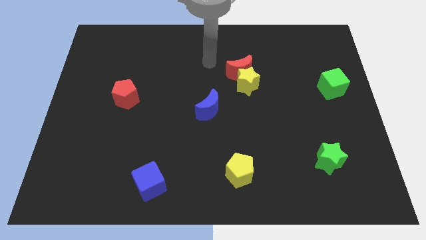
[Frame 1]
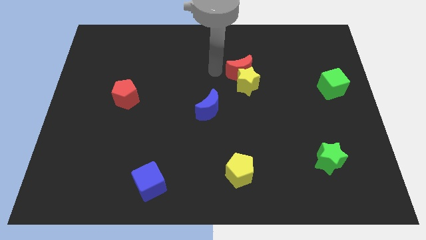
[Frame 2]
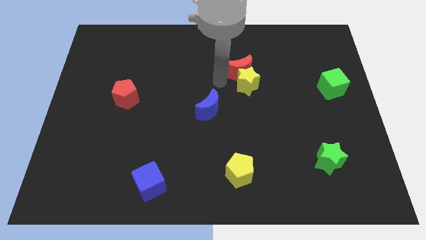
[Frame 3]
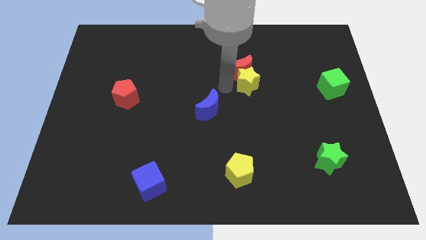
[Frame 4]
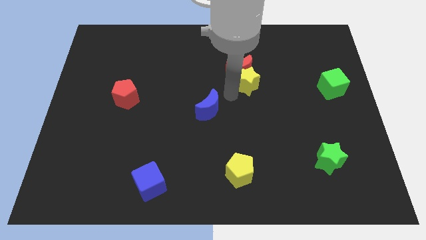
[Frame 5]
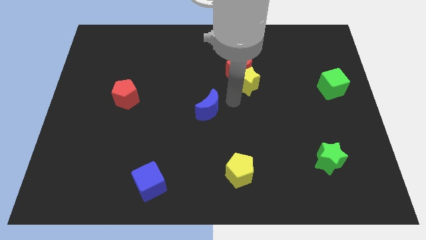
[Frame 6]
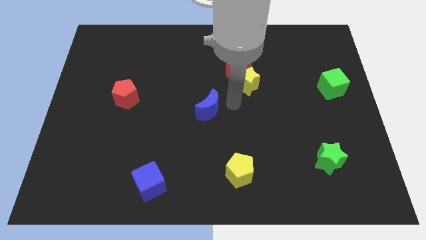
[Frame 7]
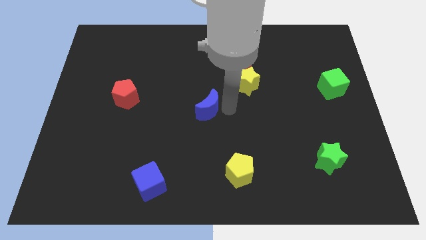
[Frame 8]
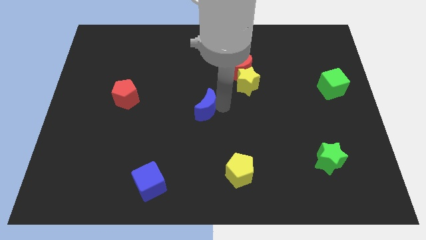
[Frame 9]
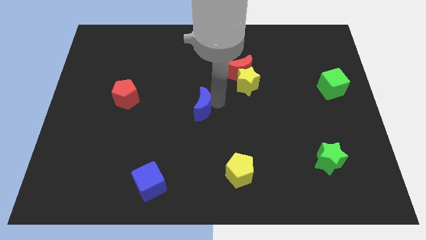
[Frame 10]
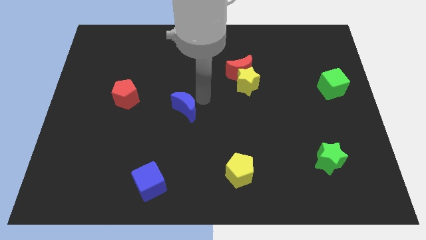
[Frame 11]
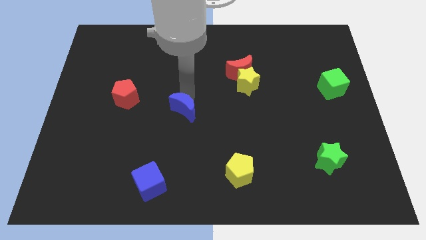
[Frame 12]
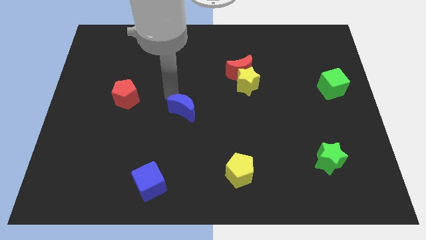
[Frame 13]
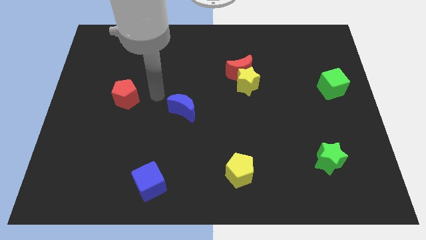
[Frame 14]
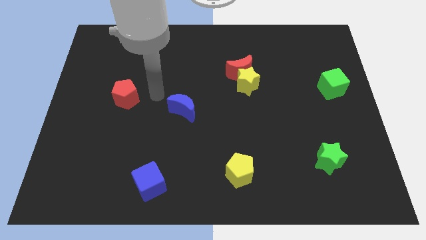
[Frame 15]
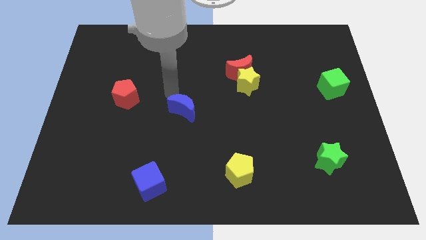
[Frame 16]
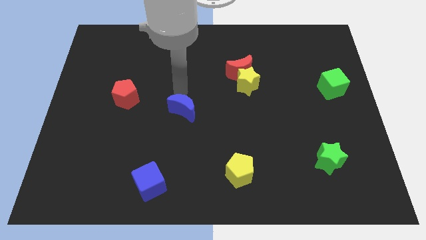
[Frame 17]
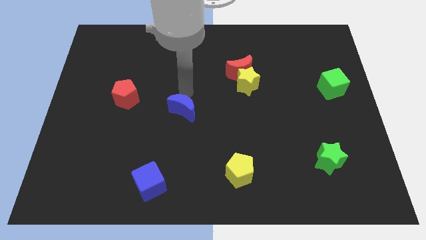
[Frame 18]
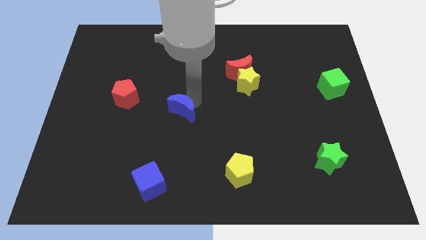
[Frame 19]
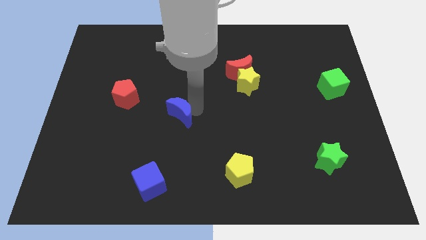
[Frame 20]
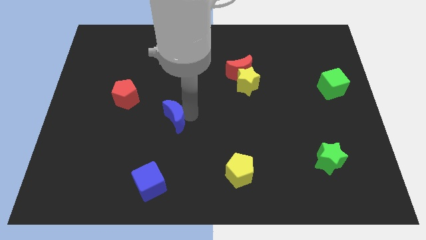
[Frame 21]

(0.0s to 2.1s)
push the blue moon slightly downwards

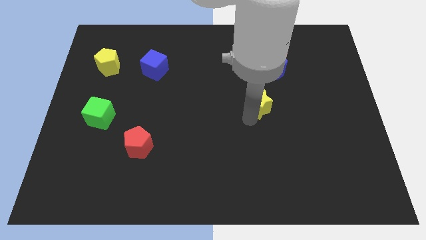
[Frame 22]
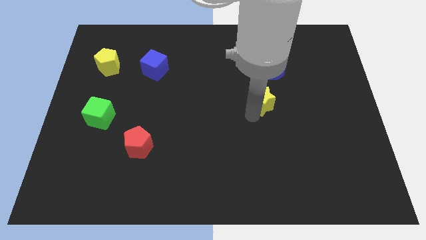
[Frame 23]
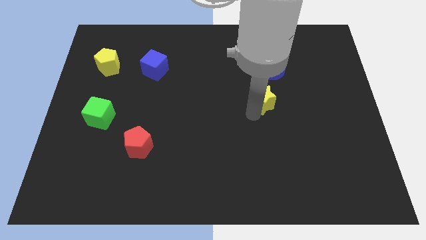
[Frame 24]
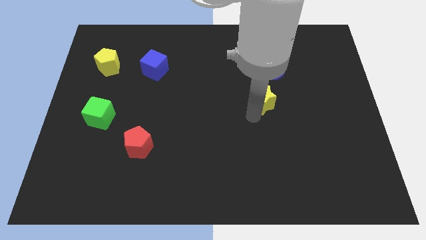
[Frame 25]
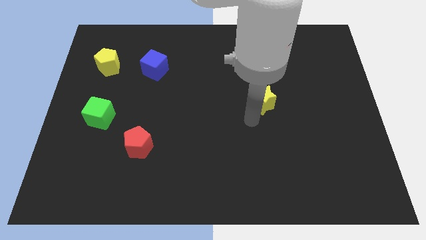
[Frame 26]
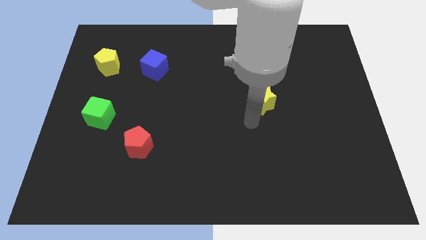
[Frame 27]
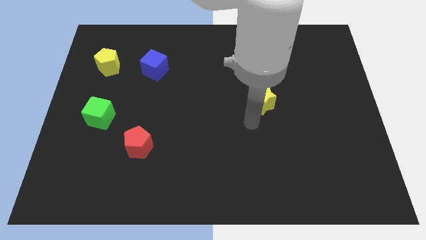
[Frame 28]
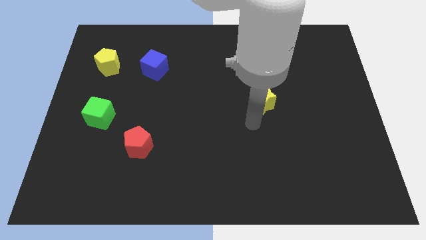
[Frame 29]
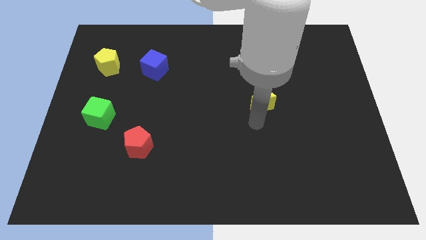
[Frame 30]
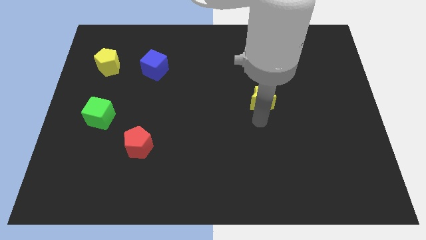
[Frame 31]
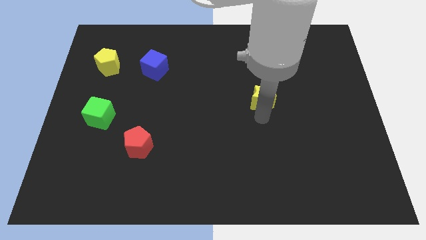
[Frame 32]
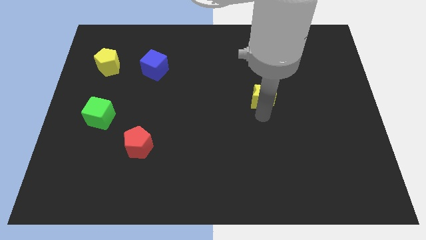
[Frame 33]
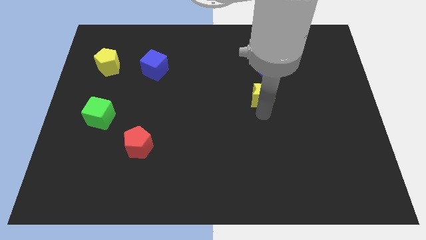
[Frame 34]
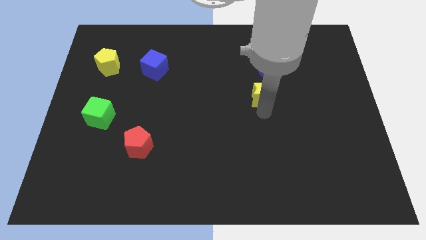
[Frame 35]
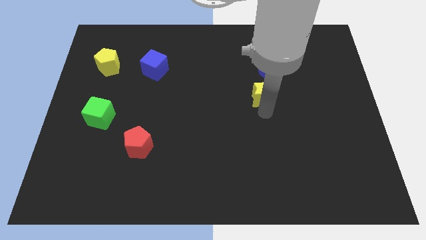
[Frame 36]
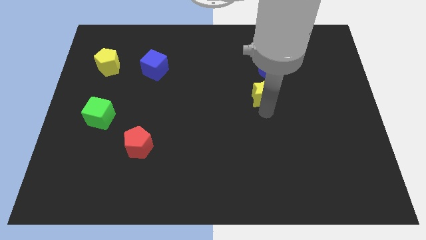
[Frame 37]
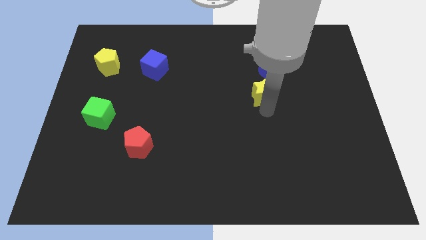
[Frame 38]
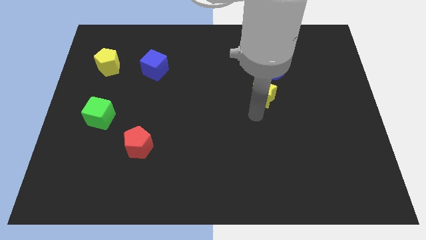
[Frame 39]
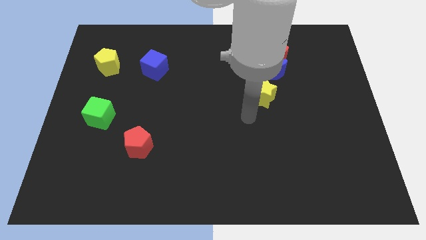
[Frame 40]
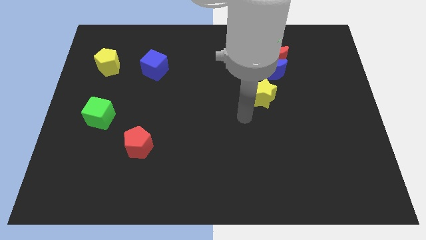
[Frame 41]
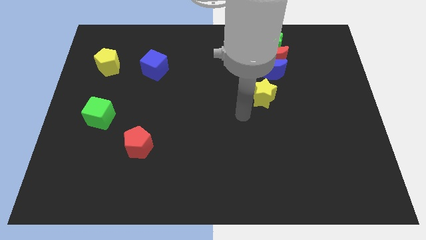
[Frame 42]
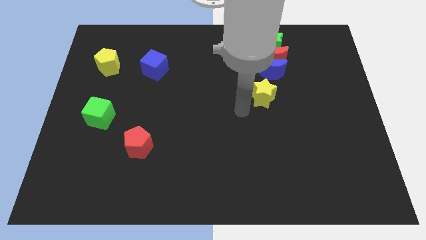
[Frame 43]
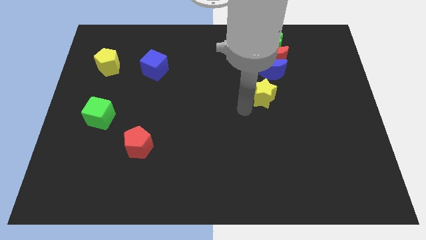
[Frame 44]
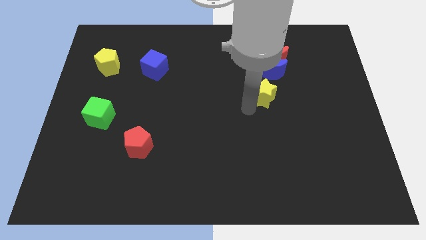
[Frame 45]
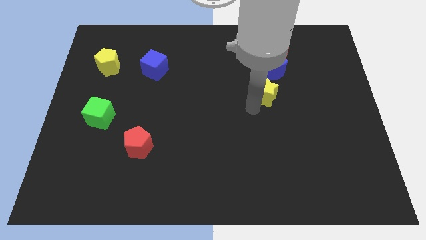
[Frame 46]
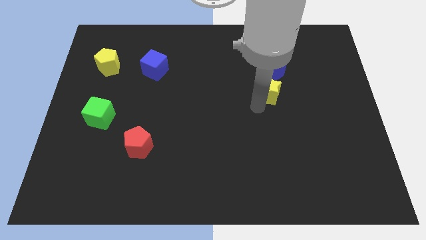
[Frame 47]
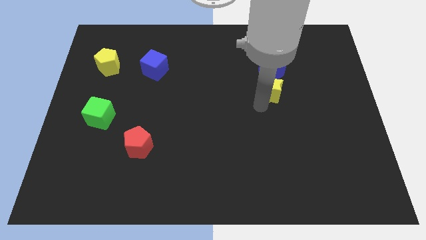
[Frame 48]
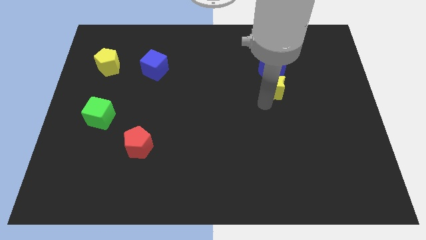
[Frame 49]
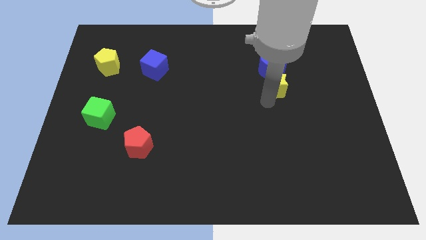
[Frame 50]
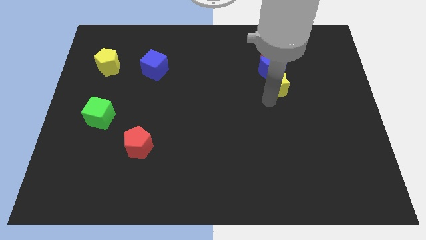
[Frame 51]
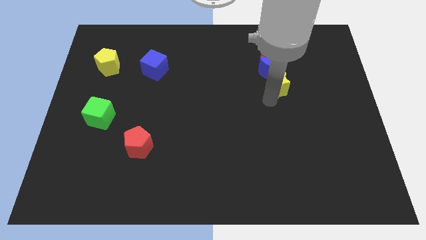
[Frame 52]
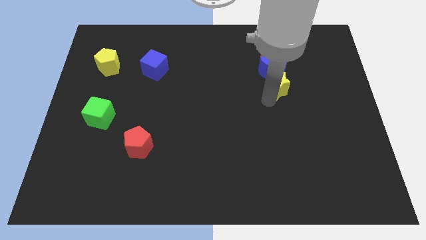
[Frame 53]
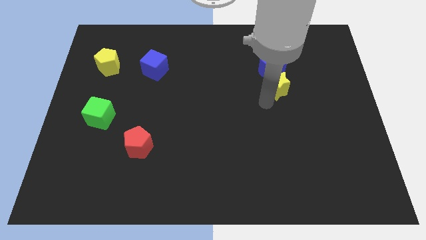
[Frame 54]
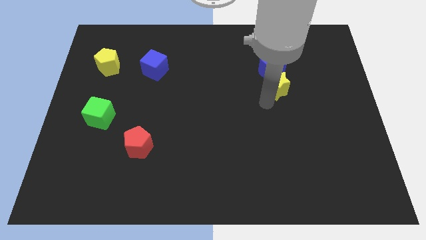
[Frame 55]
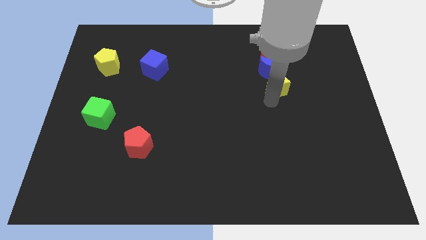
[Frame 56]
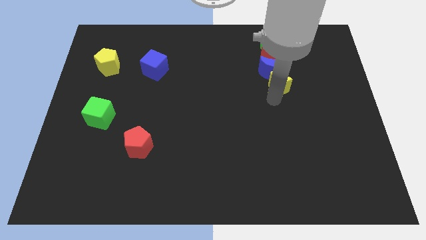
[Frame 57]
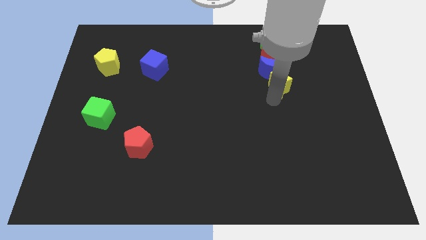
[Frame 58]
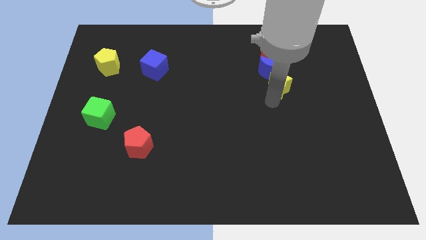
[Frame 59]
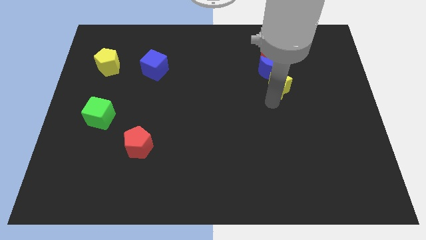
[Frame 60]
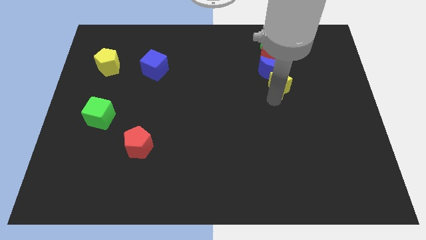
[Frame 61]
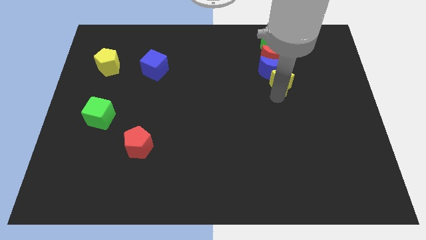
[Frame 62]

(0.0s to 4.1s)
place a yellow star below the red crescent

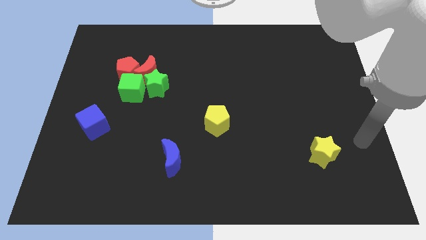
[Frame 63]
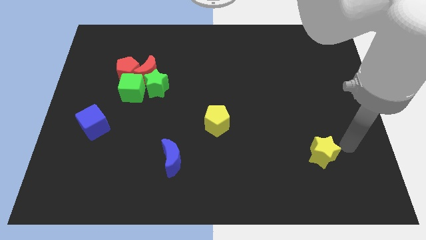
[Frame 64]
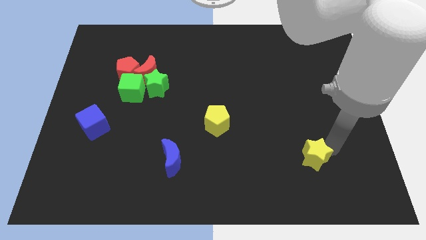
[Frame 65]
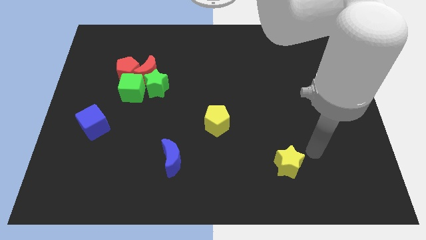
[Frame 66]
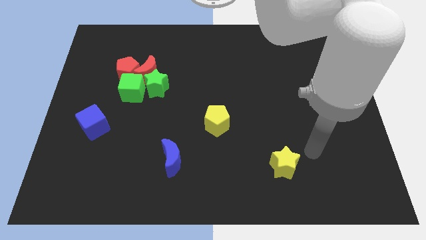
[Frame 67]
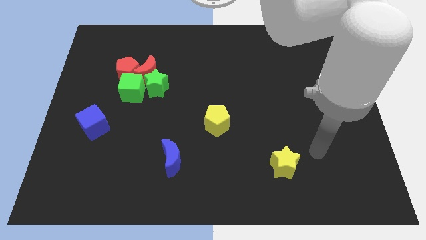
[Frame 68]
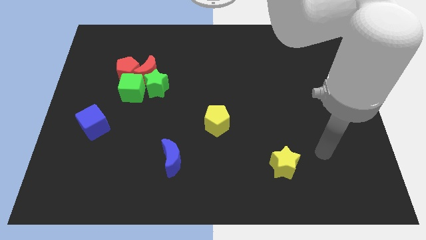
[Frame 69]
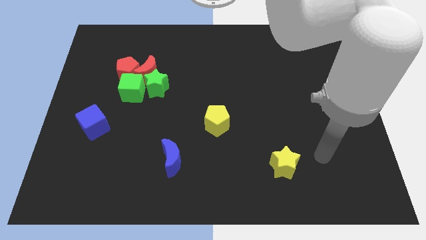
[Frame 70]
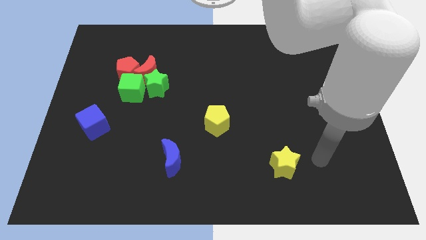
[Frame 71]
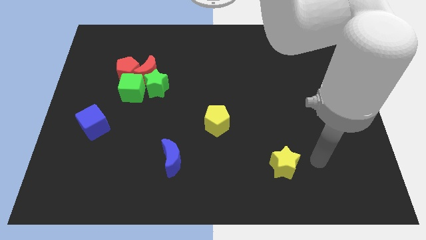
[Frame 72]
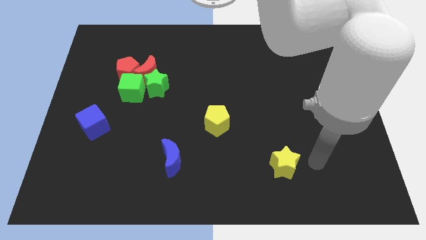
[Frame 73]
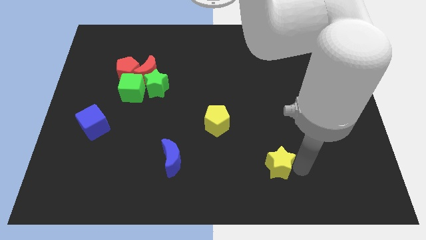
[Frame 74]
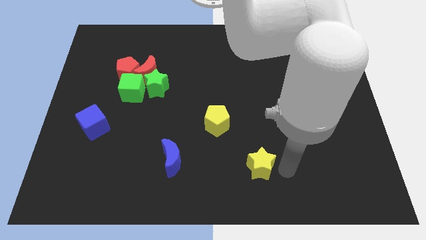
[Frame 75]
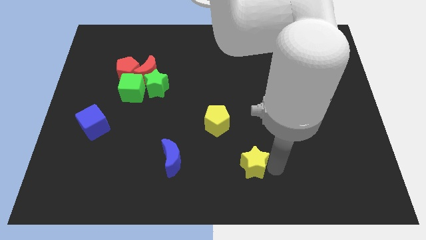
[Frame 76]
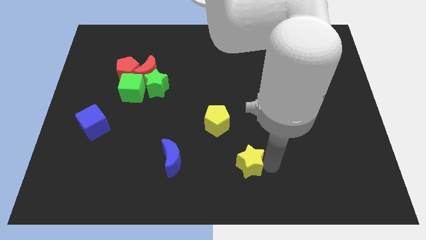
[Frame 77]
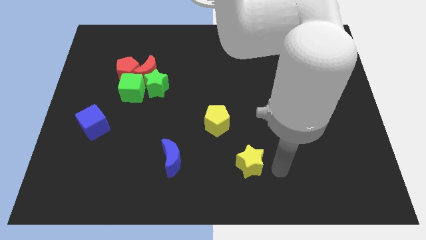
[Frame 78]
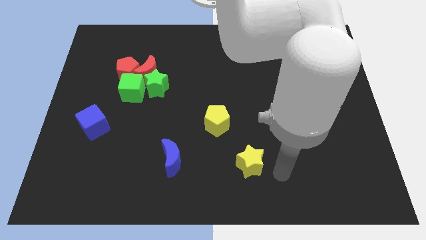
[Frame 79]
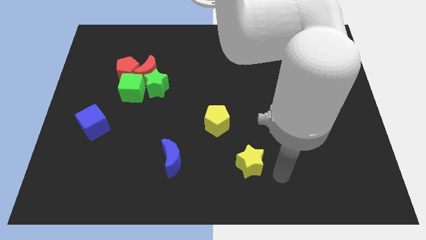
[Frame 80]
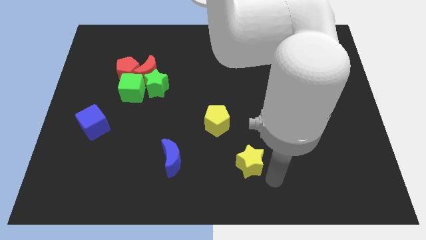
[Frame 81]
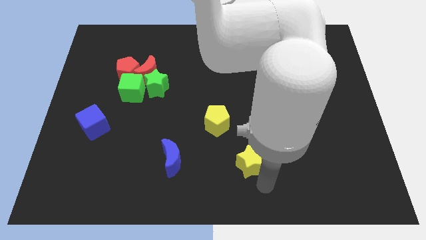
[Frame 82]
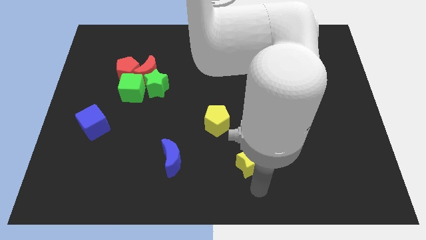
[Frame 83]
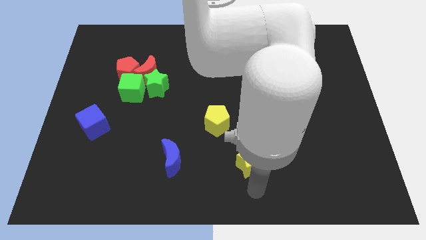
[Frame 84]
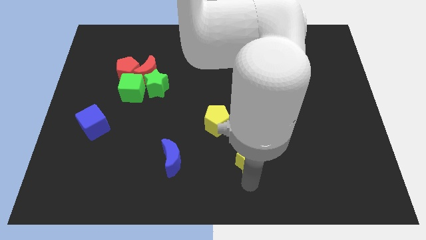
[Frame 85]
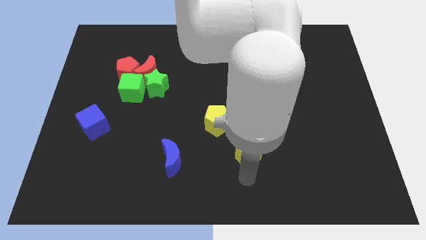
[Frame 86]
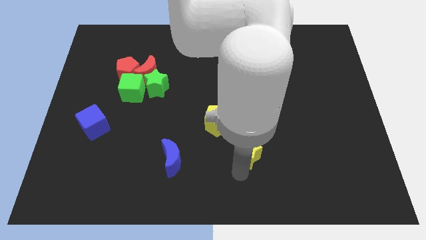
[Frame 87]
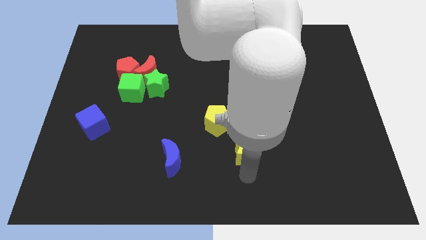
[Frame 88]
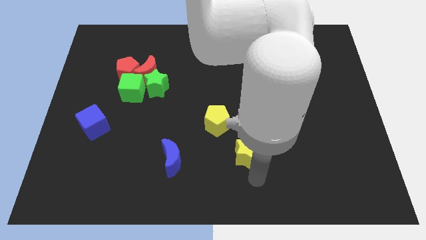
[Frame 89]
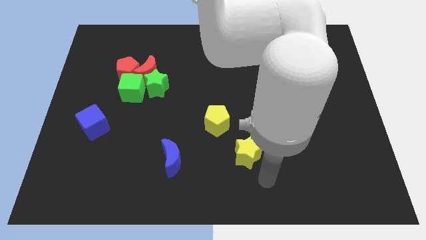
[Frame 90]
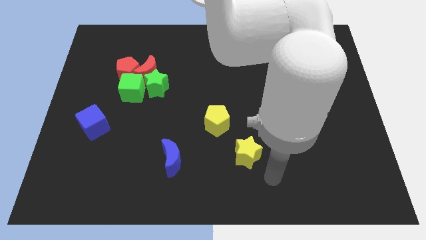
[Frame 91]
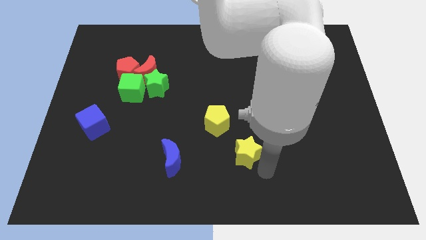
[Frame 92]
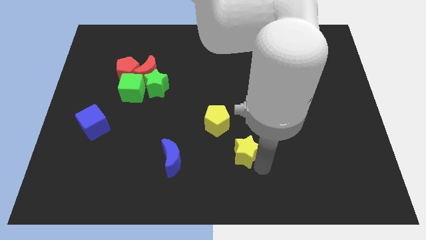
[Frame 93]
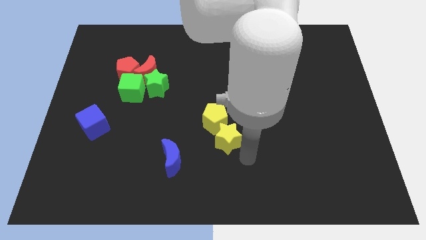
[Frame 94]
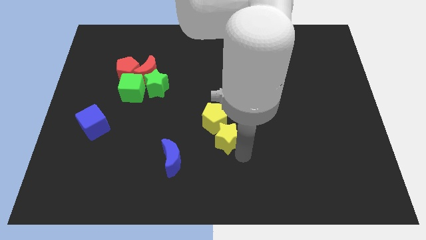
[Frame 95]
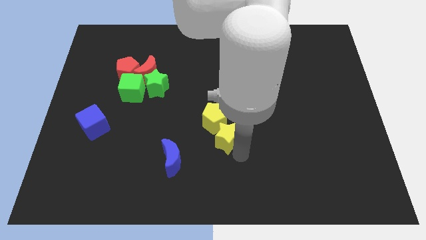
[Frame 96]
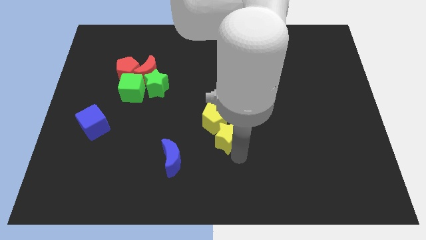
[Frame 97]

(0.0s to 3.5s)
push yellow star below yellow pentagon
